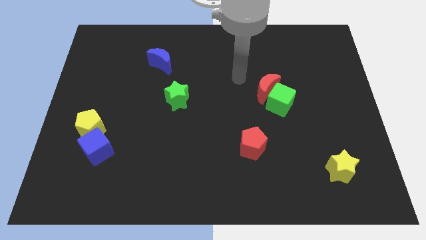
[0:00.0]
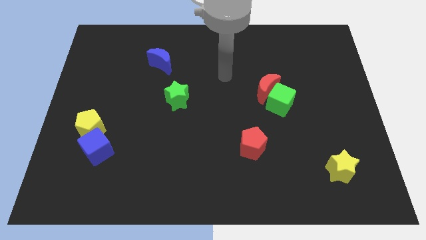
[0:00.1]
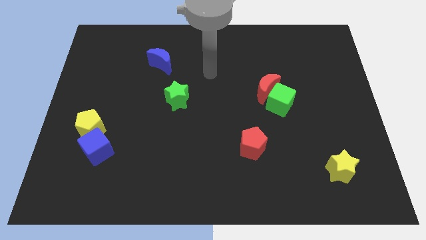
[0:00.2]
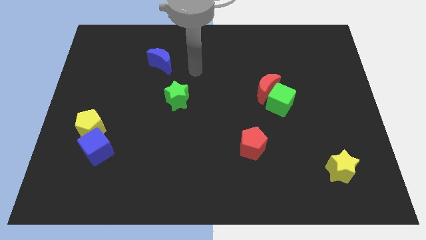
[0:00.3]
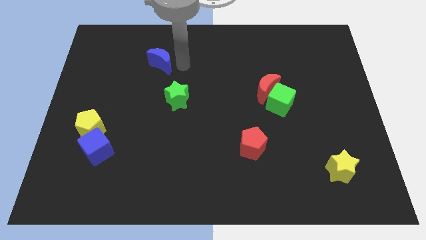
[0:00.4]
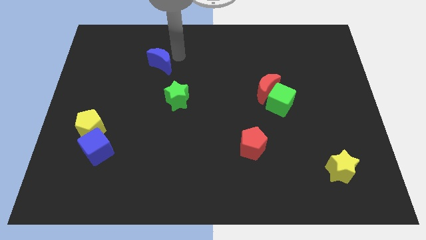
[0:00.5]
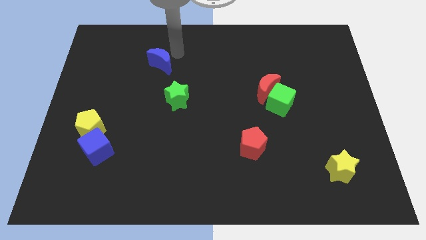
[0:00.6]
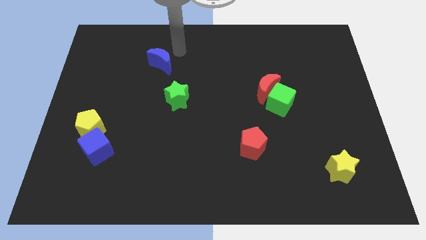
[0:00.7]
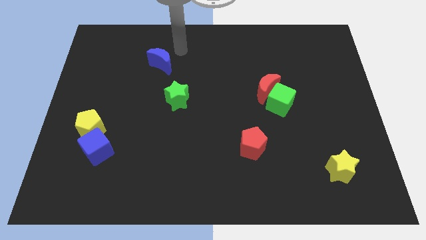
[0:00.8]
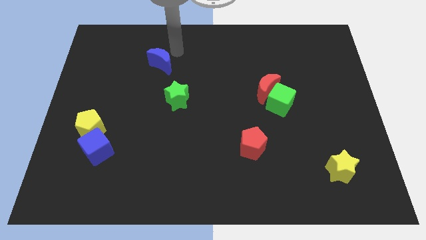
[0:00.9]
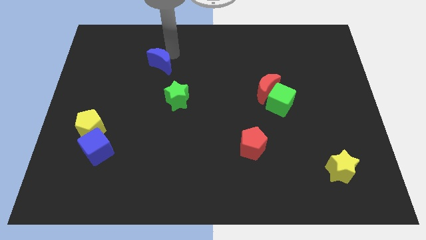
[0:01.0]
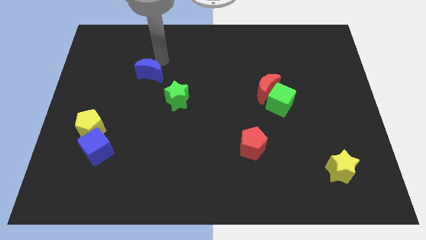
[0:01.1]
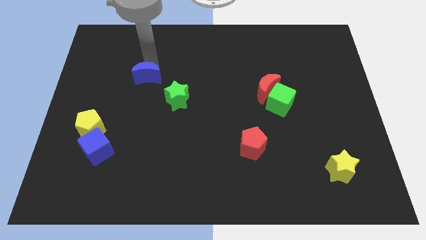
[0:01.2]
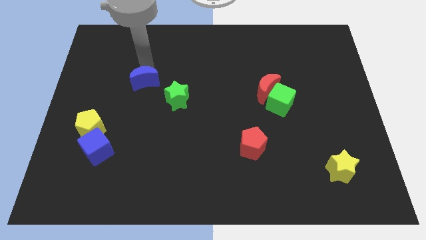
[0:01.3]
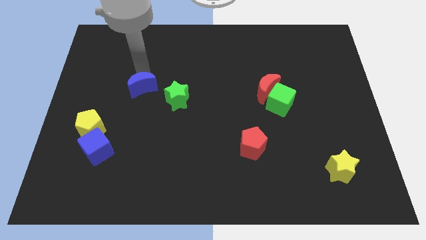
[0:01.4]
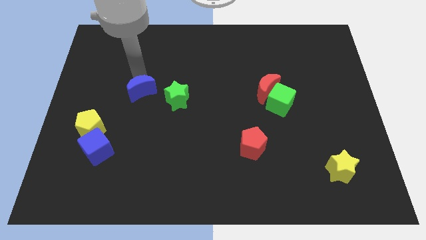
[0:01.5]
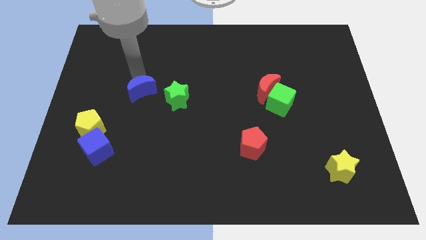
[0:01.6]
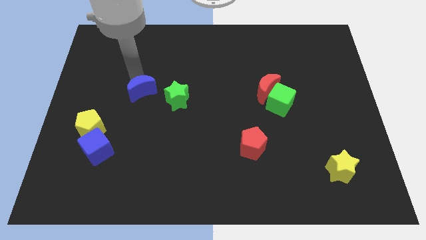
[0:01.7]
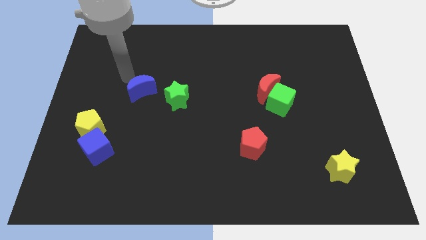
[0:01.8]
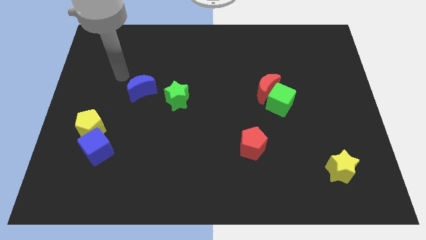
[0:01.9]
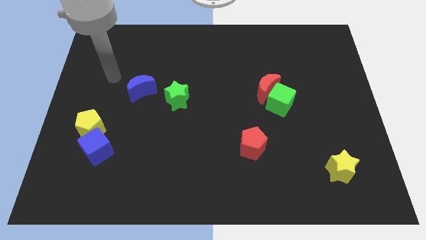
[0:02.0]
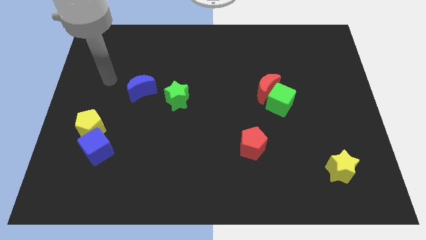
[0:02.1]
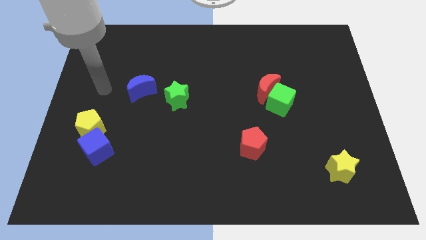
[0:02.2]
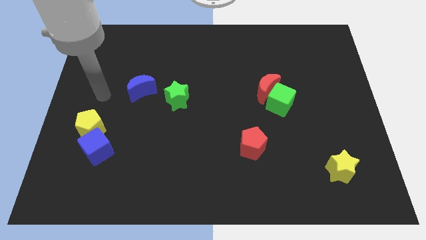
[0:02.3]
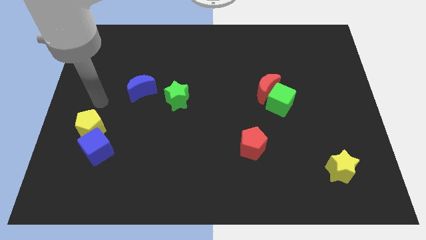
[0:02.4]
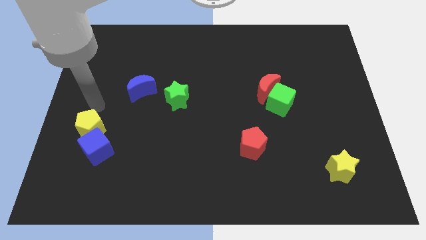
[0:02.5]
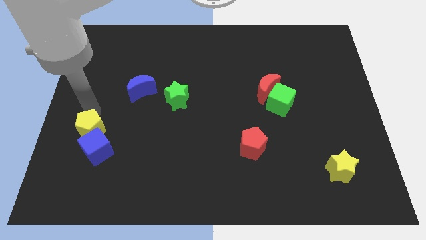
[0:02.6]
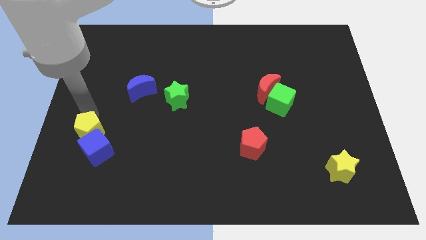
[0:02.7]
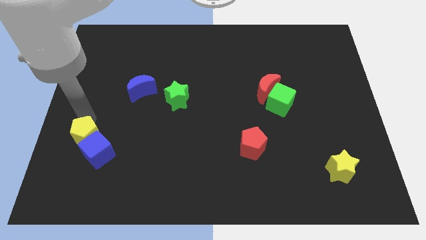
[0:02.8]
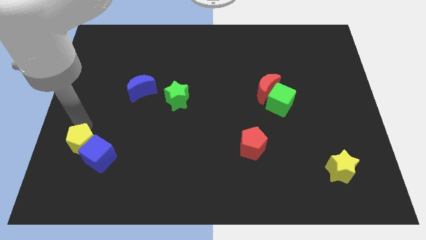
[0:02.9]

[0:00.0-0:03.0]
move the blue crescent towards the left of the green star

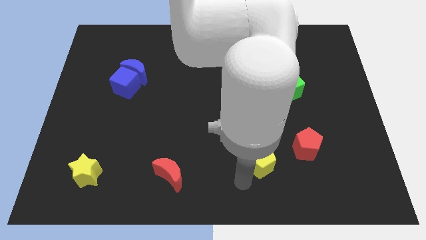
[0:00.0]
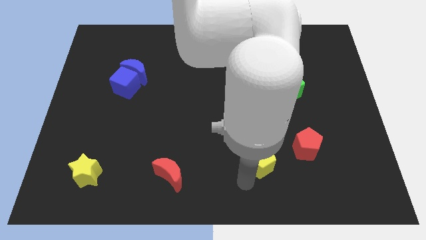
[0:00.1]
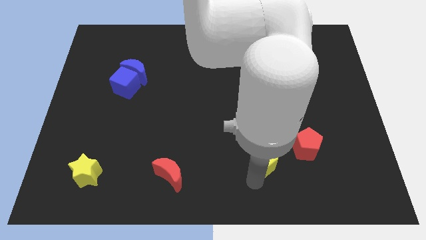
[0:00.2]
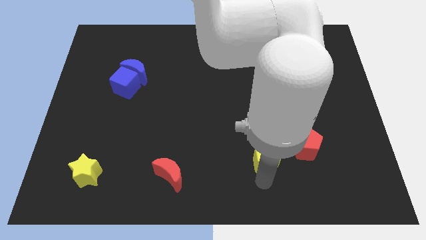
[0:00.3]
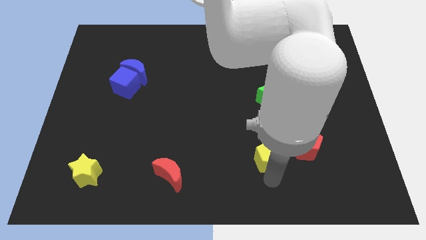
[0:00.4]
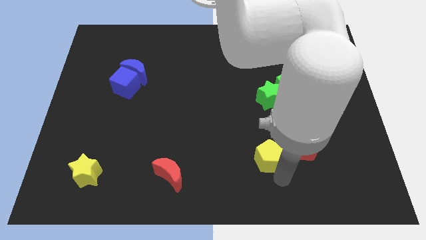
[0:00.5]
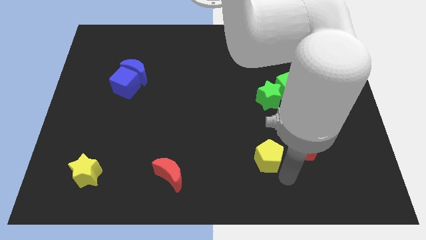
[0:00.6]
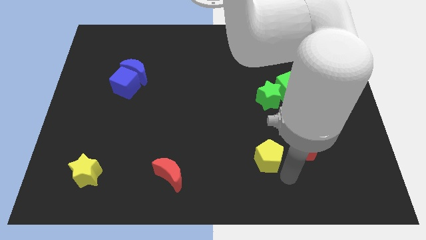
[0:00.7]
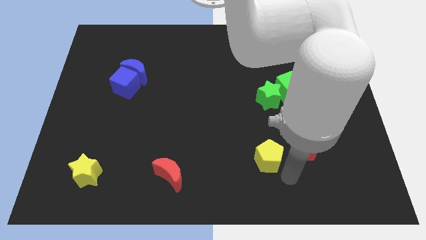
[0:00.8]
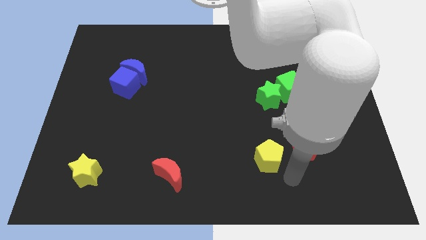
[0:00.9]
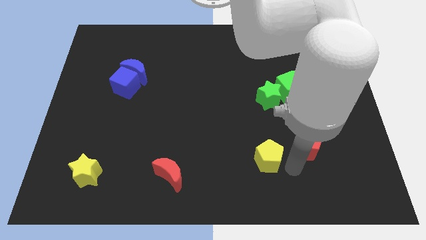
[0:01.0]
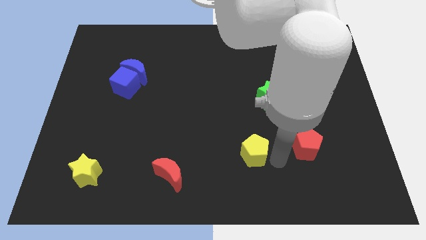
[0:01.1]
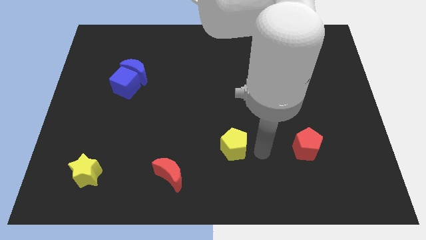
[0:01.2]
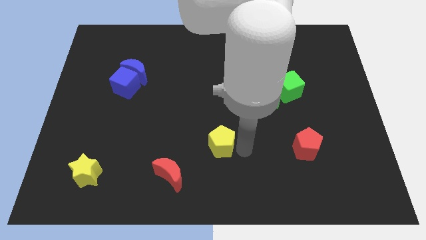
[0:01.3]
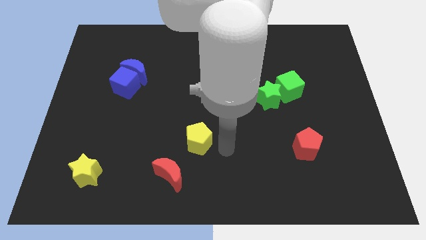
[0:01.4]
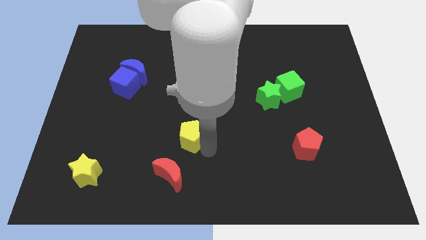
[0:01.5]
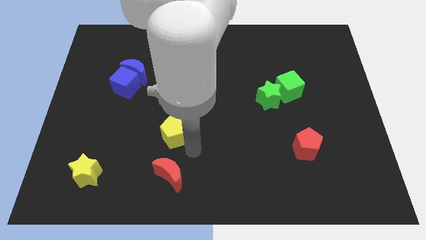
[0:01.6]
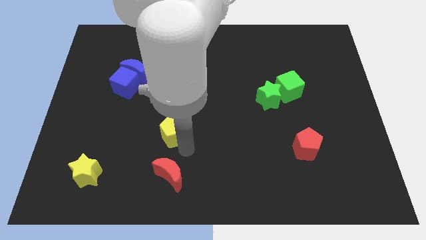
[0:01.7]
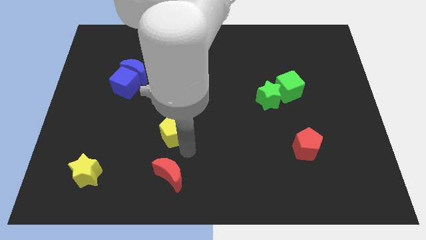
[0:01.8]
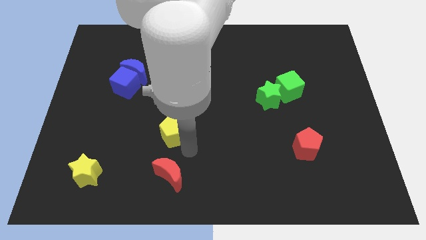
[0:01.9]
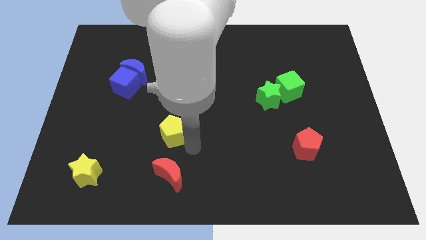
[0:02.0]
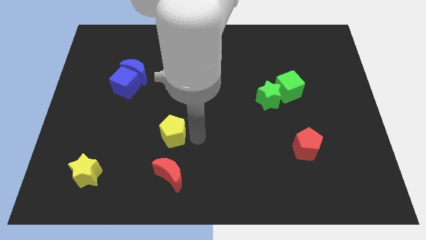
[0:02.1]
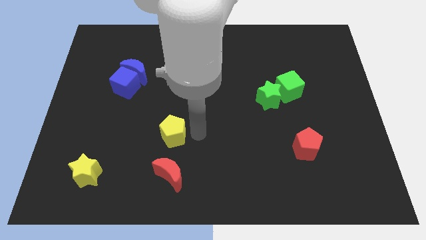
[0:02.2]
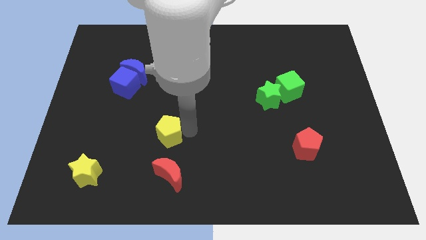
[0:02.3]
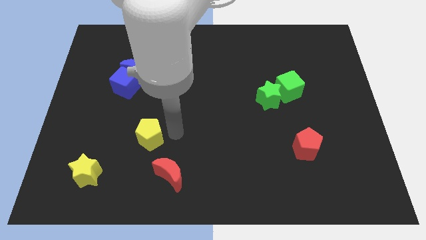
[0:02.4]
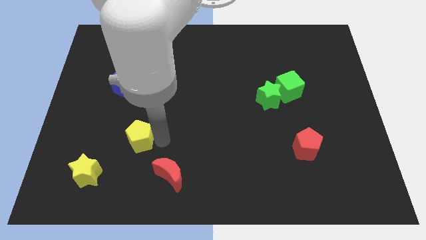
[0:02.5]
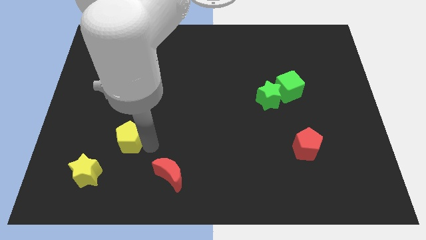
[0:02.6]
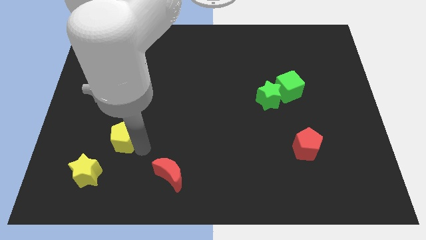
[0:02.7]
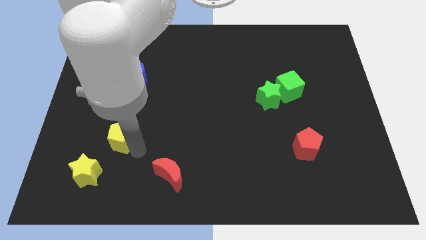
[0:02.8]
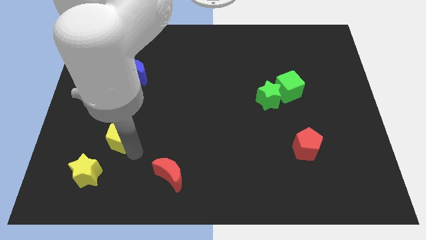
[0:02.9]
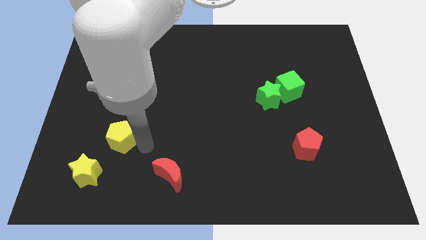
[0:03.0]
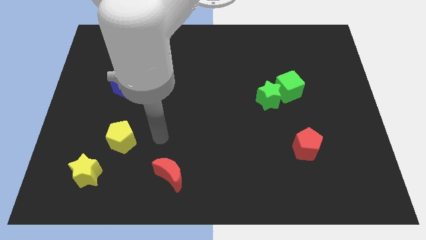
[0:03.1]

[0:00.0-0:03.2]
push yellow pentagon diagonally top right of the yellow star

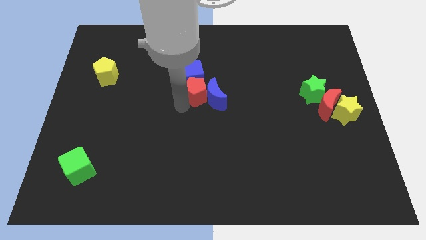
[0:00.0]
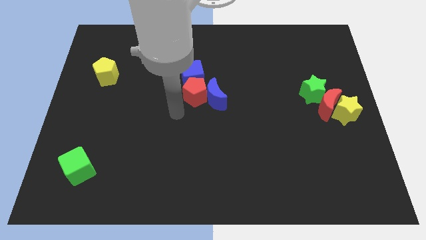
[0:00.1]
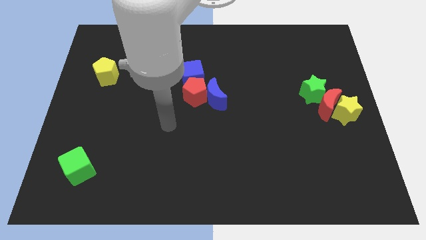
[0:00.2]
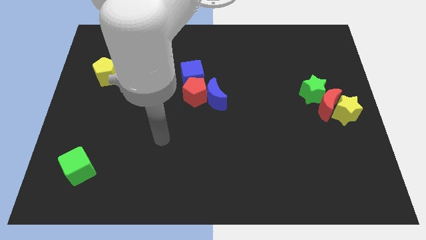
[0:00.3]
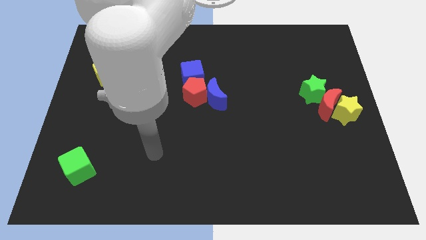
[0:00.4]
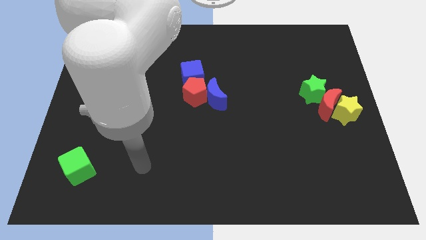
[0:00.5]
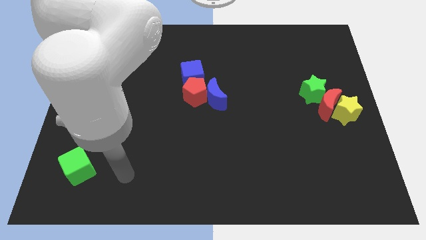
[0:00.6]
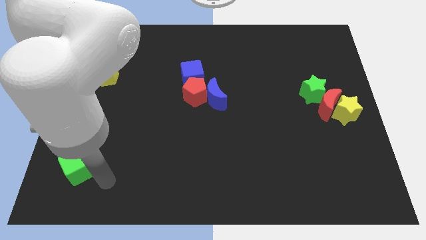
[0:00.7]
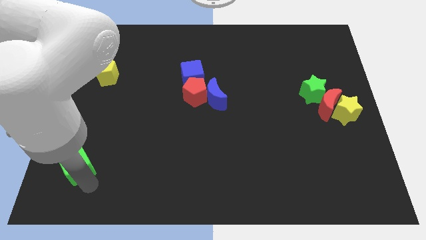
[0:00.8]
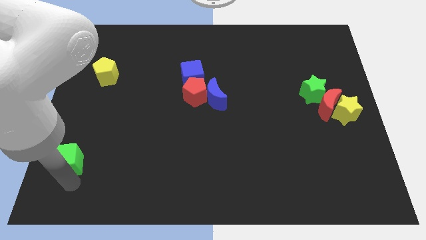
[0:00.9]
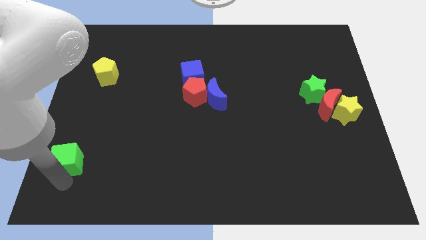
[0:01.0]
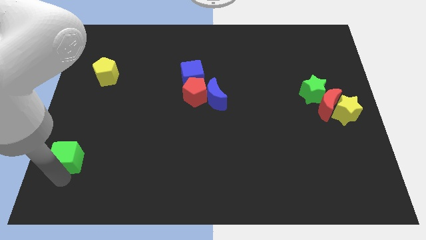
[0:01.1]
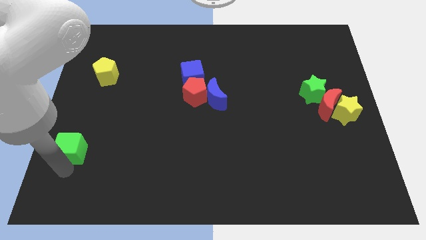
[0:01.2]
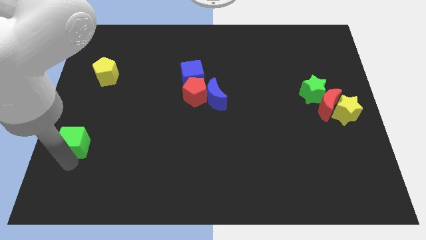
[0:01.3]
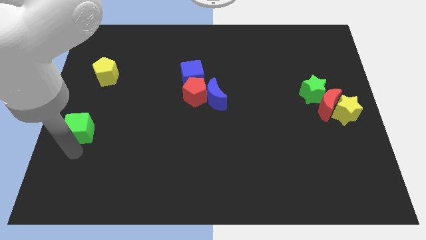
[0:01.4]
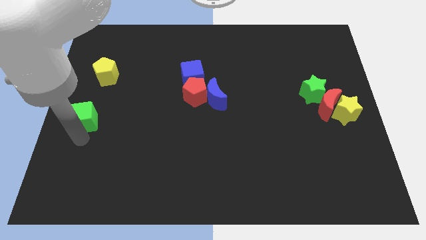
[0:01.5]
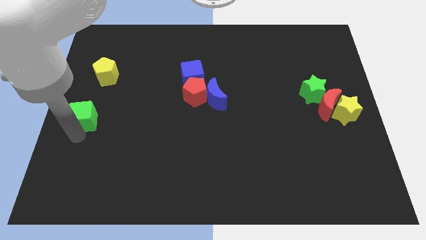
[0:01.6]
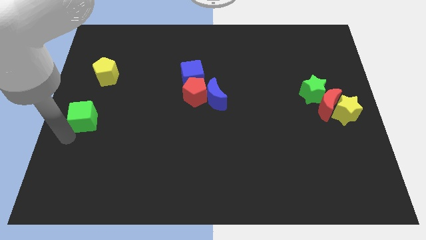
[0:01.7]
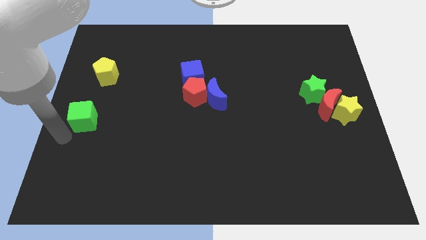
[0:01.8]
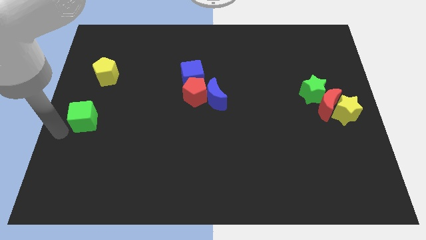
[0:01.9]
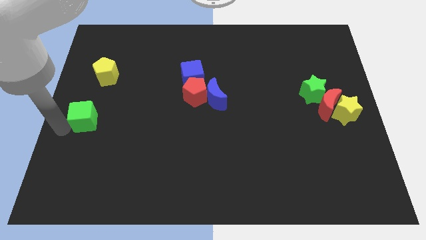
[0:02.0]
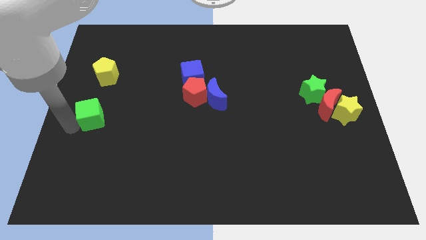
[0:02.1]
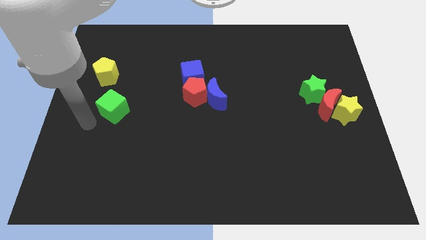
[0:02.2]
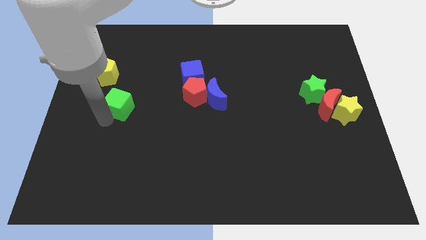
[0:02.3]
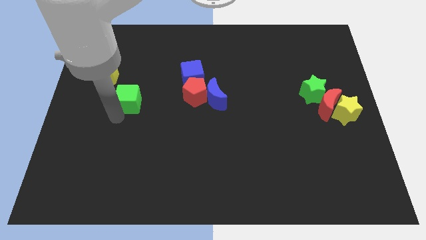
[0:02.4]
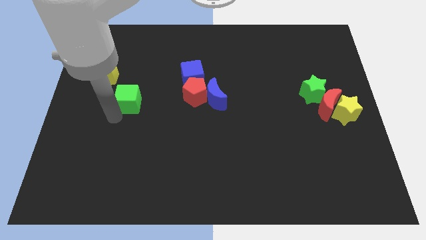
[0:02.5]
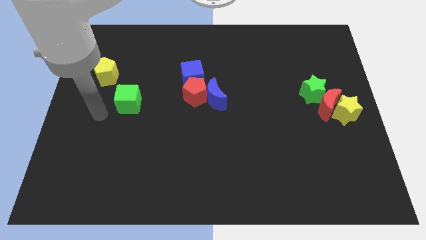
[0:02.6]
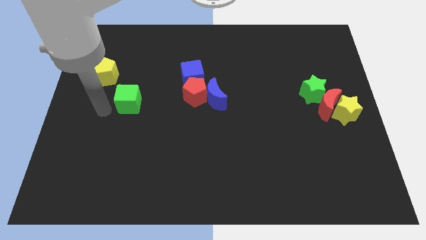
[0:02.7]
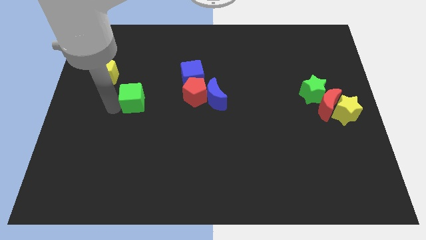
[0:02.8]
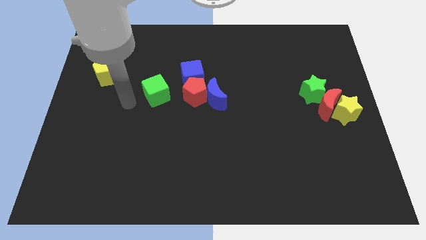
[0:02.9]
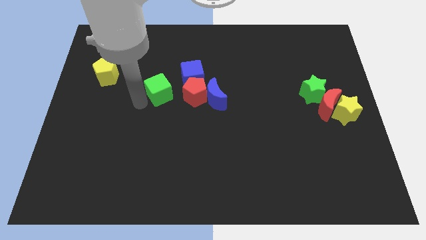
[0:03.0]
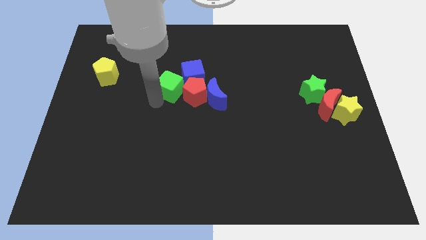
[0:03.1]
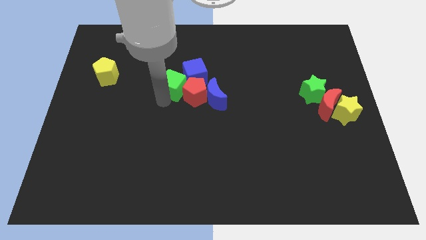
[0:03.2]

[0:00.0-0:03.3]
drag the green cube into the left side of the group of blocks
